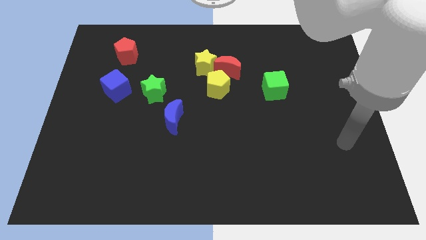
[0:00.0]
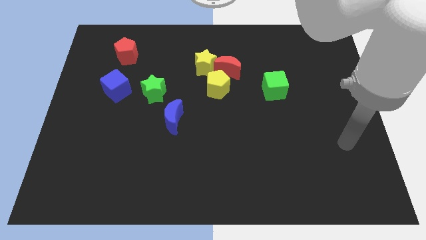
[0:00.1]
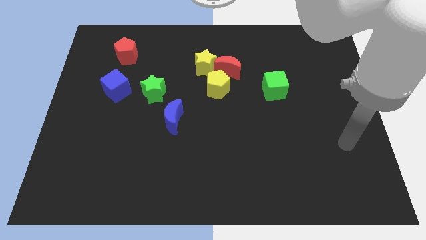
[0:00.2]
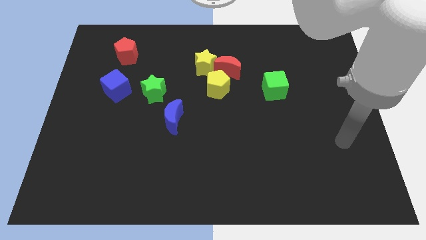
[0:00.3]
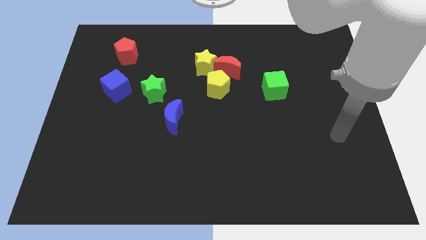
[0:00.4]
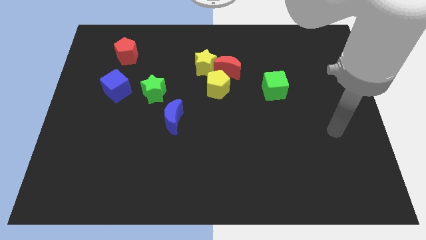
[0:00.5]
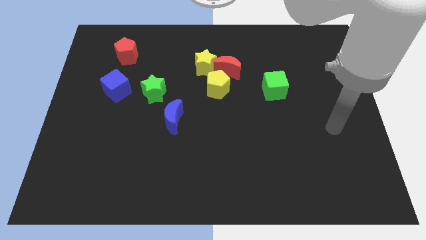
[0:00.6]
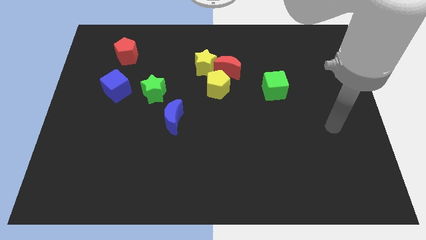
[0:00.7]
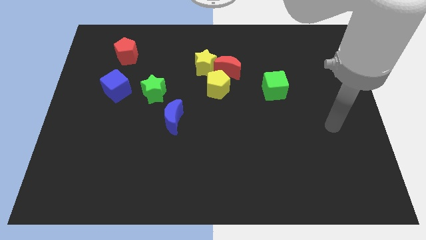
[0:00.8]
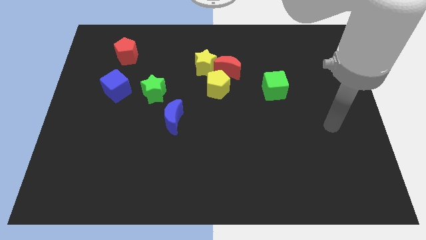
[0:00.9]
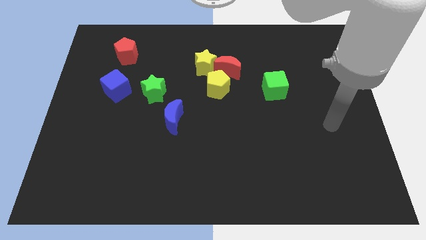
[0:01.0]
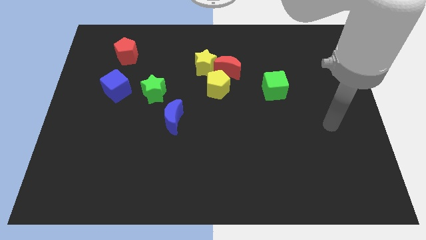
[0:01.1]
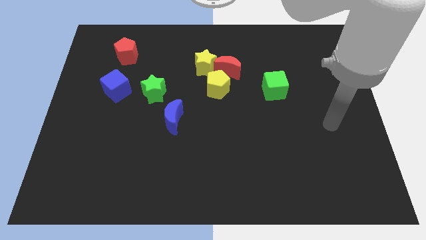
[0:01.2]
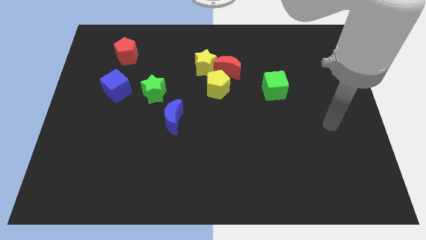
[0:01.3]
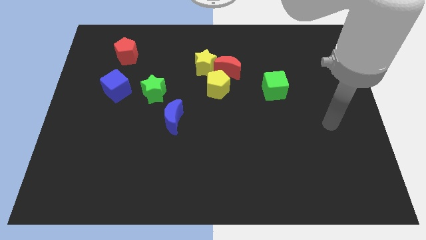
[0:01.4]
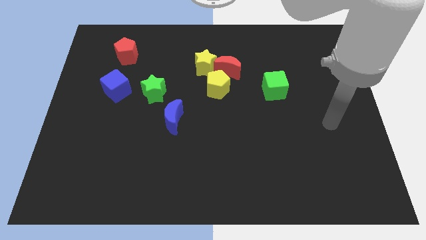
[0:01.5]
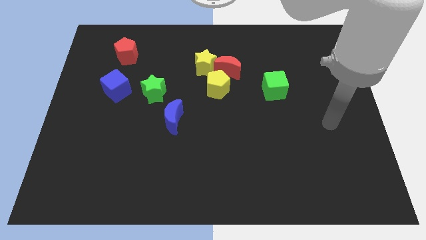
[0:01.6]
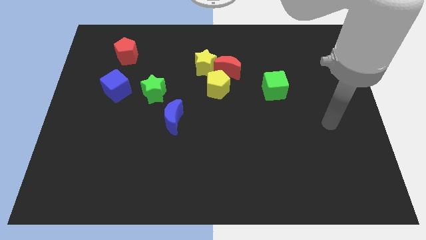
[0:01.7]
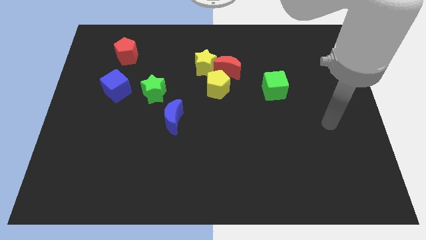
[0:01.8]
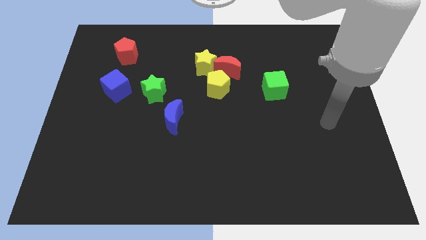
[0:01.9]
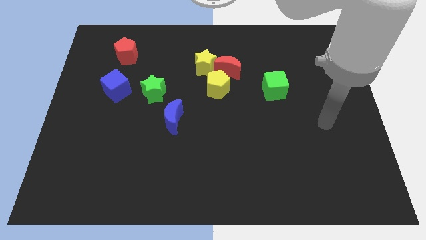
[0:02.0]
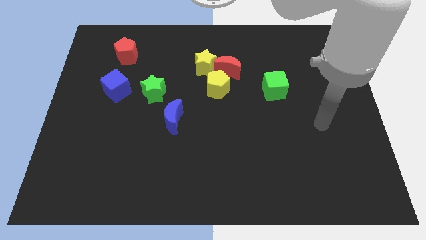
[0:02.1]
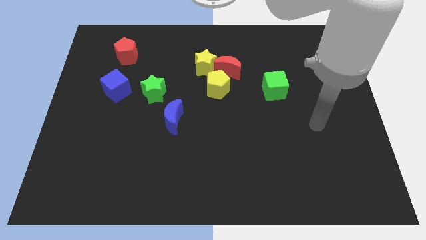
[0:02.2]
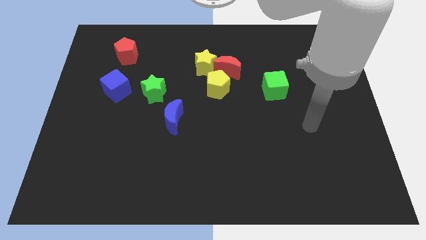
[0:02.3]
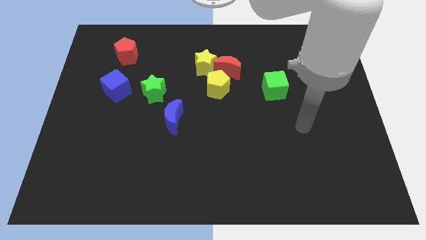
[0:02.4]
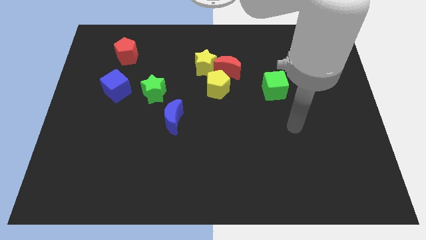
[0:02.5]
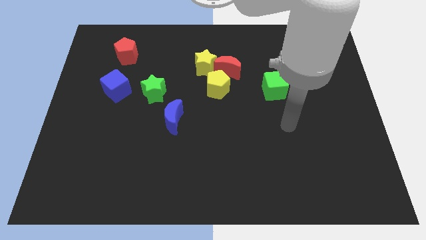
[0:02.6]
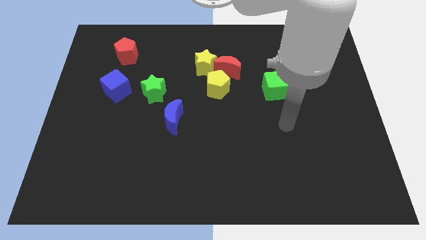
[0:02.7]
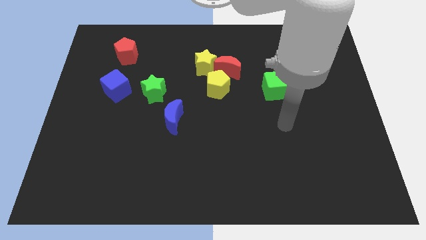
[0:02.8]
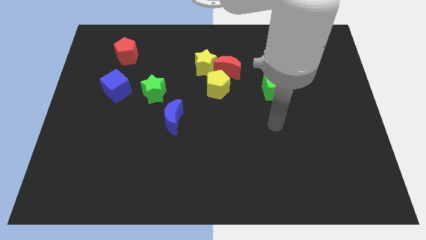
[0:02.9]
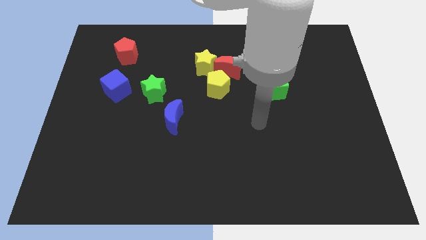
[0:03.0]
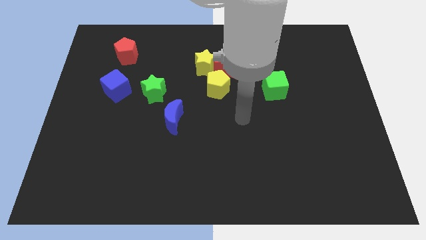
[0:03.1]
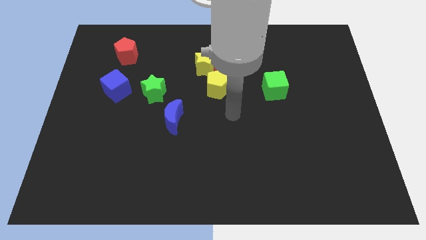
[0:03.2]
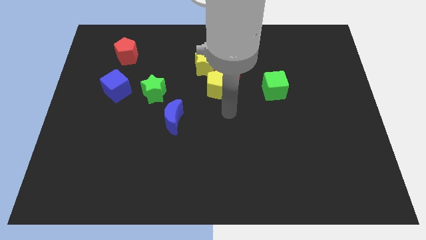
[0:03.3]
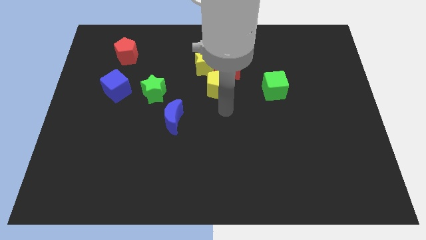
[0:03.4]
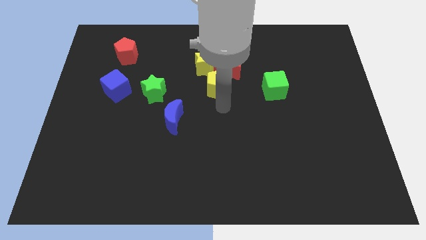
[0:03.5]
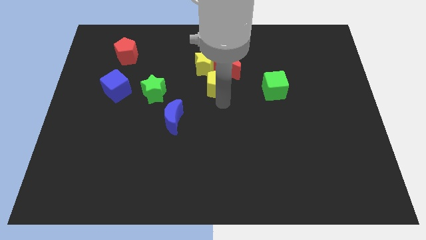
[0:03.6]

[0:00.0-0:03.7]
move your arm to the bottom of the yellow pentagon

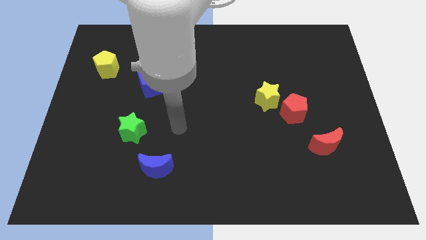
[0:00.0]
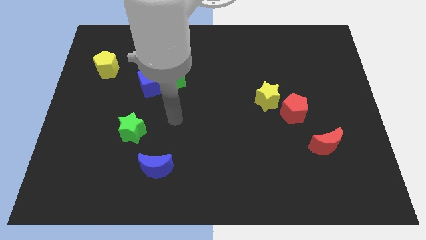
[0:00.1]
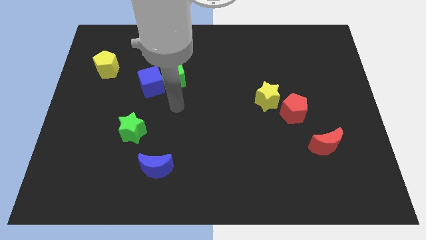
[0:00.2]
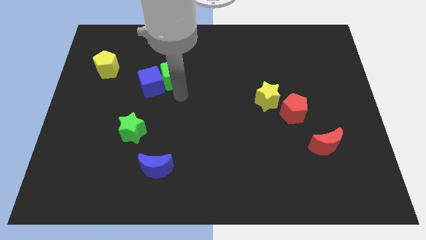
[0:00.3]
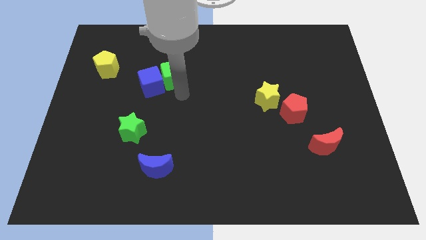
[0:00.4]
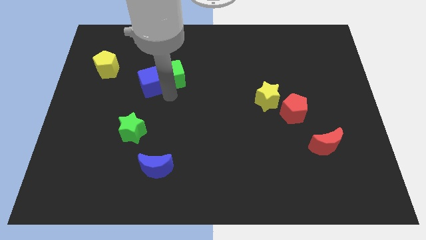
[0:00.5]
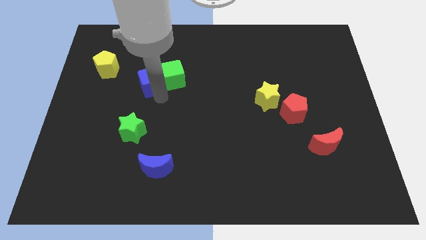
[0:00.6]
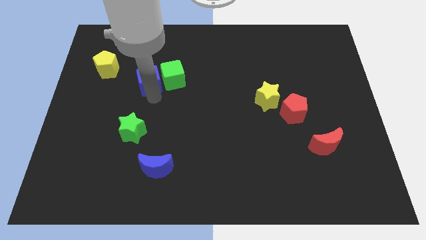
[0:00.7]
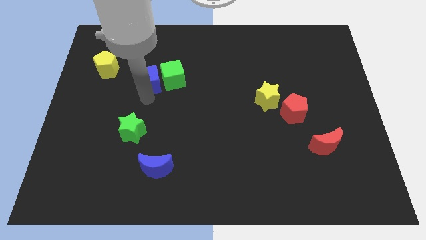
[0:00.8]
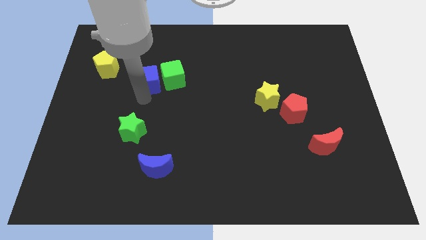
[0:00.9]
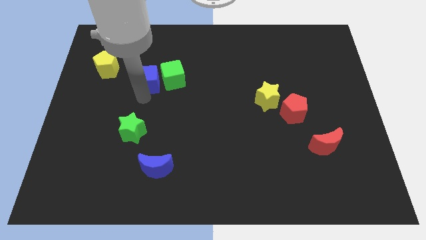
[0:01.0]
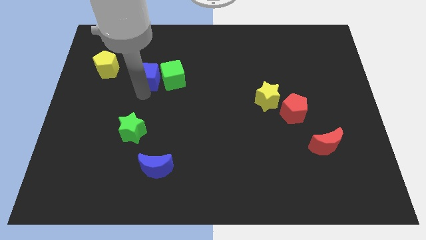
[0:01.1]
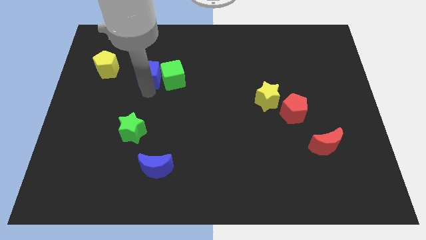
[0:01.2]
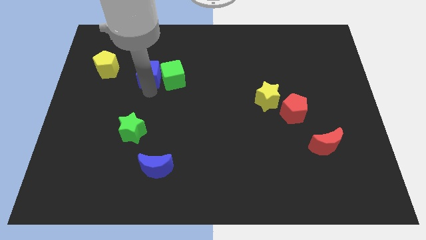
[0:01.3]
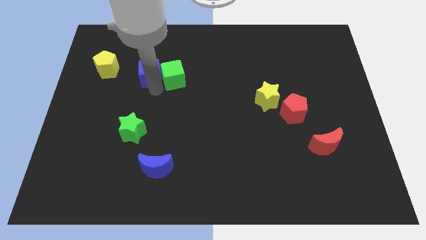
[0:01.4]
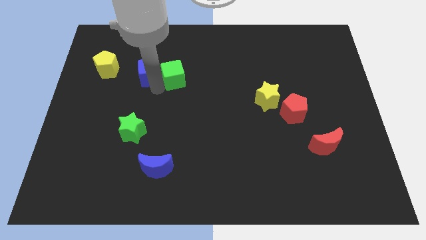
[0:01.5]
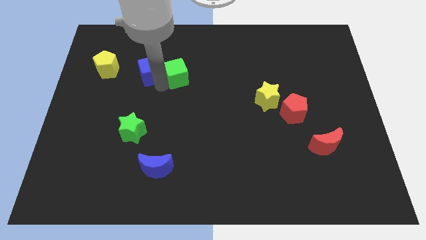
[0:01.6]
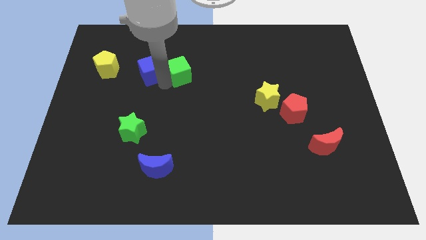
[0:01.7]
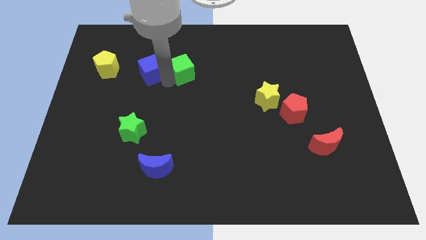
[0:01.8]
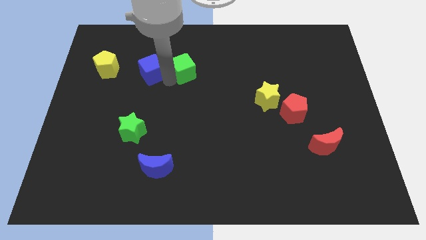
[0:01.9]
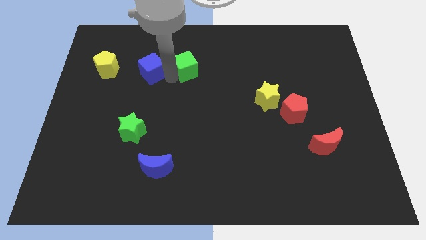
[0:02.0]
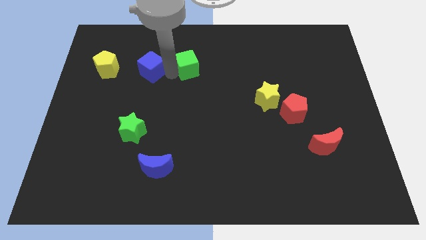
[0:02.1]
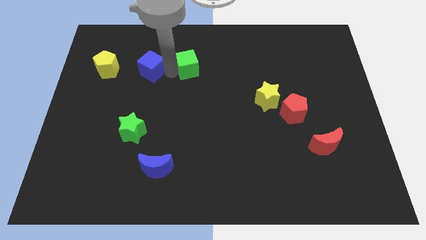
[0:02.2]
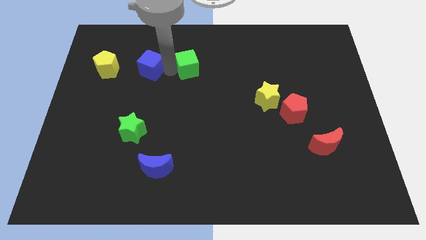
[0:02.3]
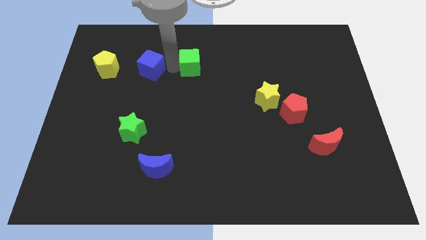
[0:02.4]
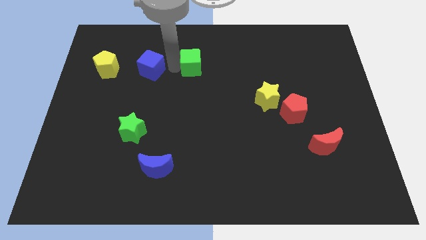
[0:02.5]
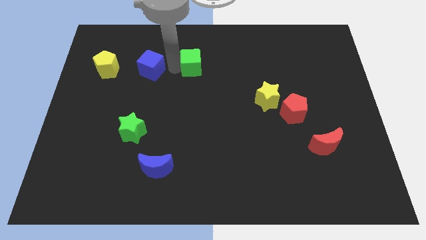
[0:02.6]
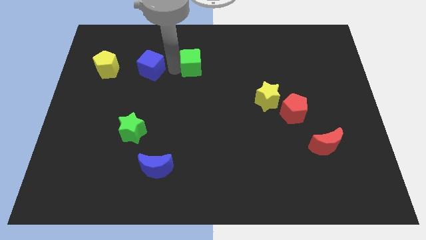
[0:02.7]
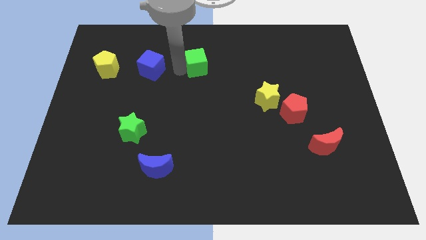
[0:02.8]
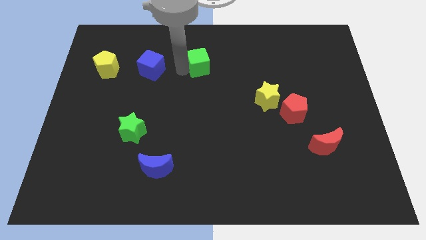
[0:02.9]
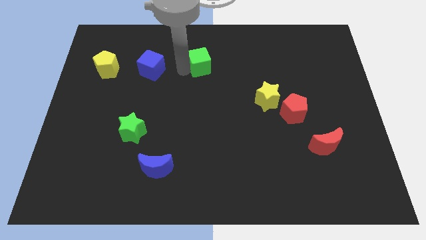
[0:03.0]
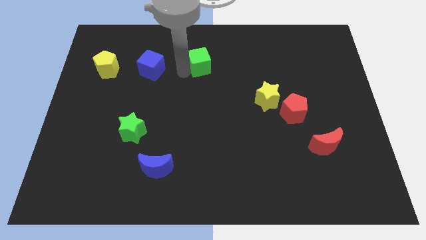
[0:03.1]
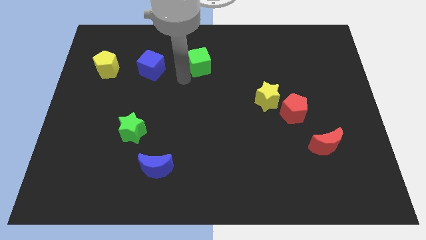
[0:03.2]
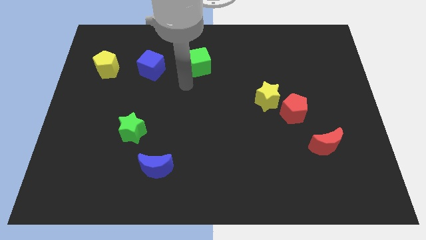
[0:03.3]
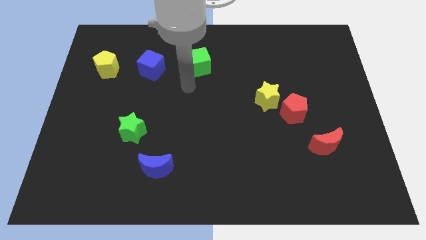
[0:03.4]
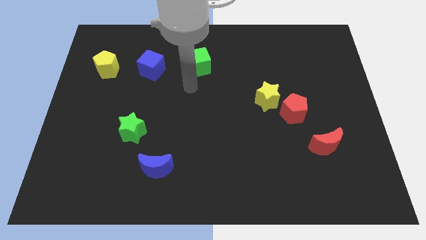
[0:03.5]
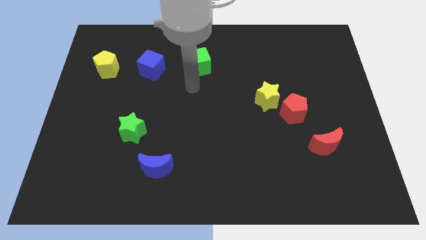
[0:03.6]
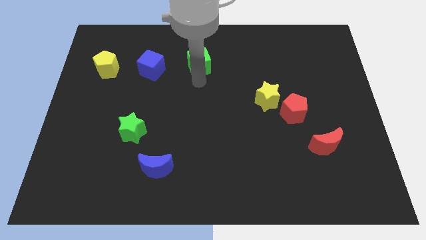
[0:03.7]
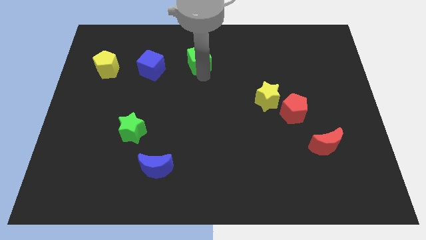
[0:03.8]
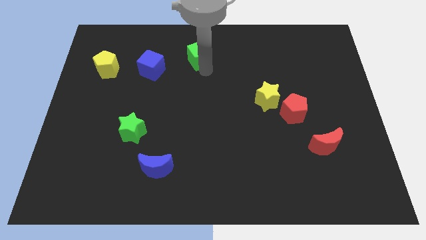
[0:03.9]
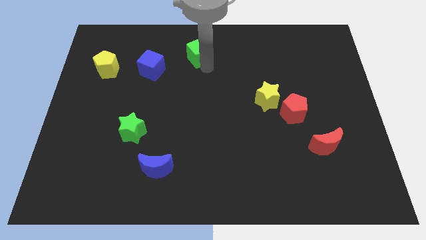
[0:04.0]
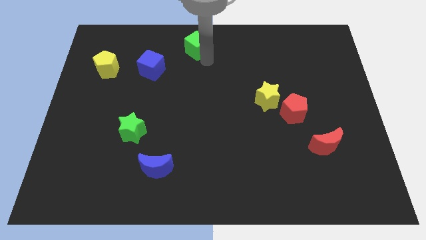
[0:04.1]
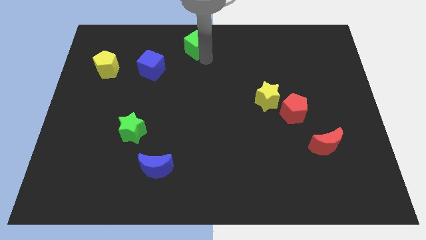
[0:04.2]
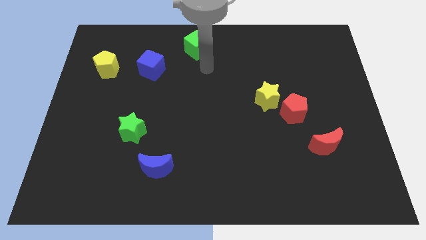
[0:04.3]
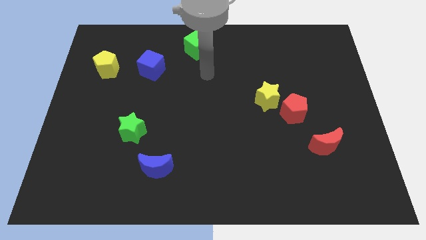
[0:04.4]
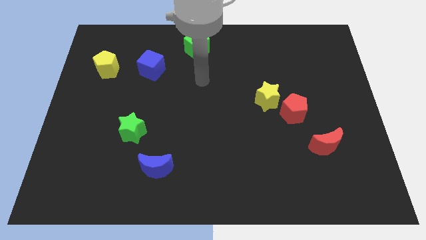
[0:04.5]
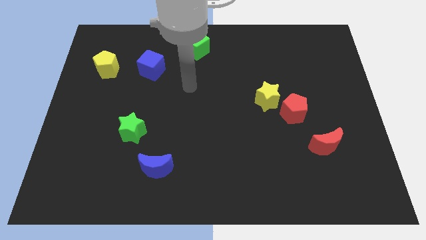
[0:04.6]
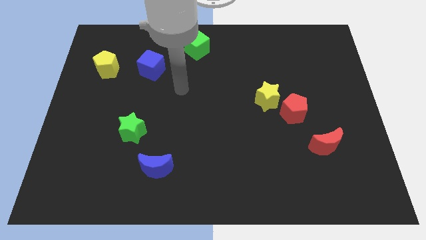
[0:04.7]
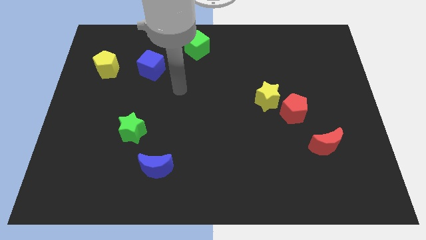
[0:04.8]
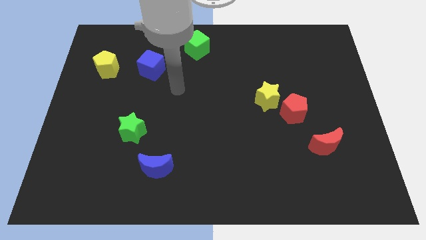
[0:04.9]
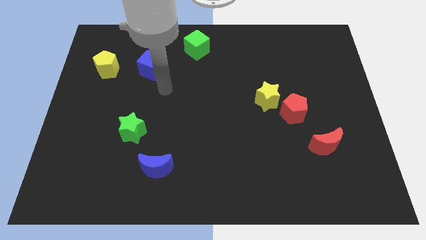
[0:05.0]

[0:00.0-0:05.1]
separate the green cube from the blue cube

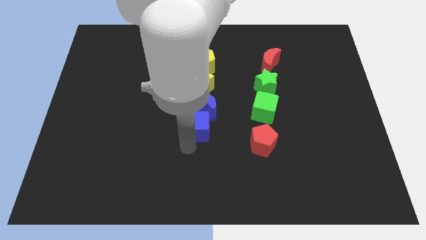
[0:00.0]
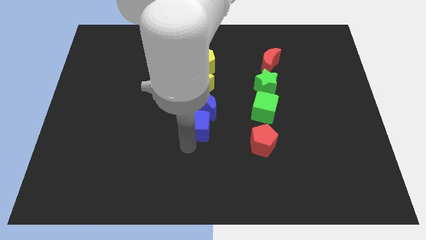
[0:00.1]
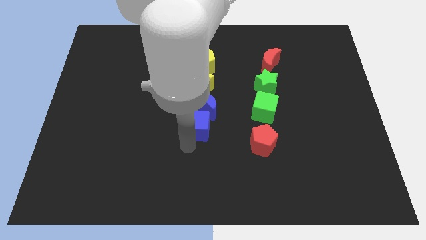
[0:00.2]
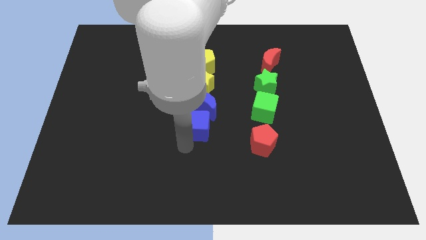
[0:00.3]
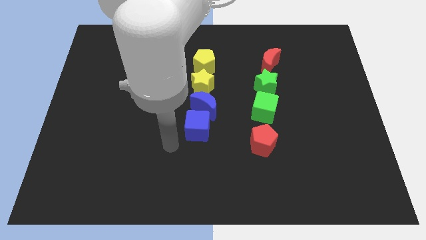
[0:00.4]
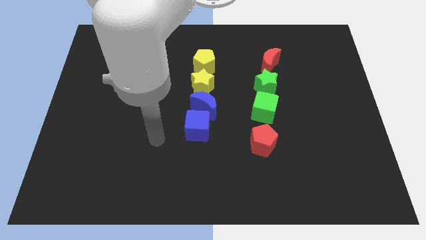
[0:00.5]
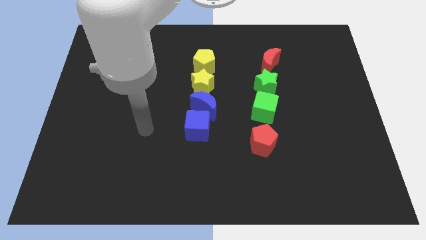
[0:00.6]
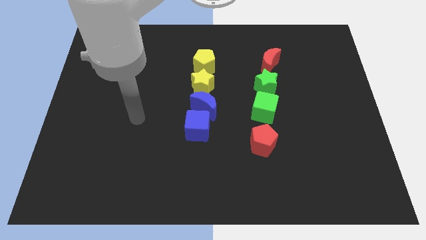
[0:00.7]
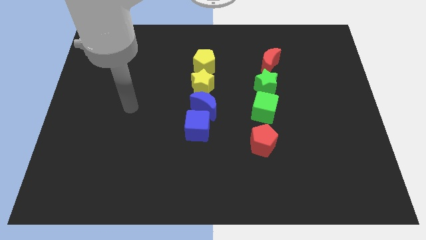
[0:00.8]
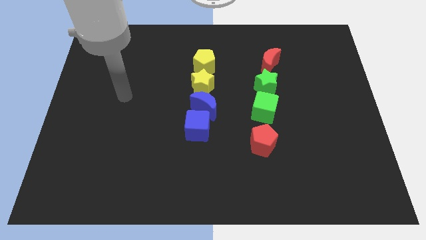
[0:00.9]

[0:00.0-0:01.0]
move your arm away from the blue cube
